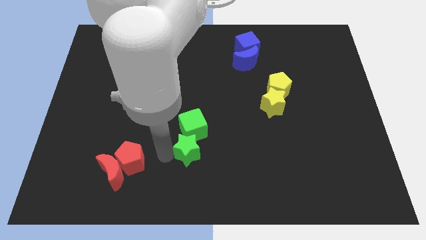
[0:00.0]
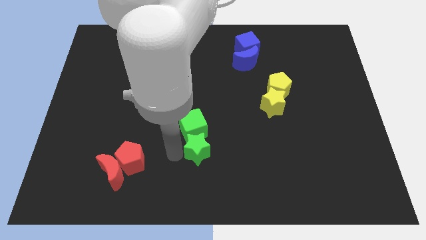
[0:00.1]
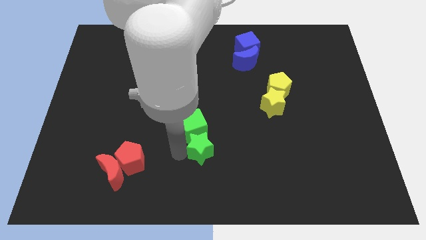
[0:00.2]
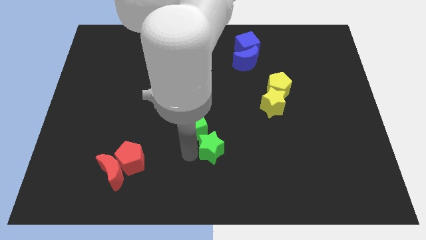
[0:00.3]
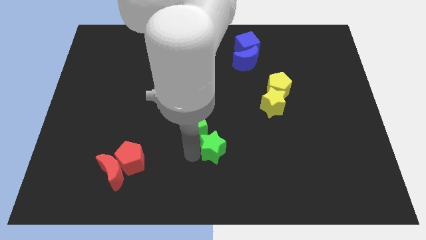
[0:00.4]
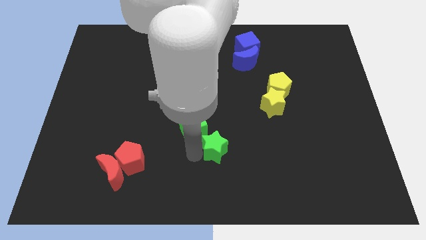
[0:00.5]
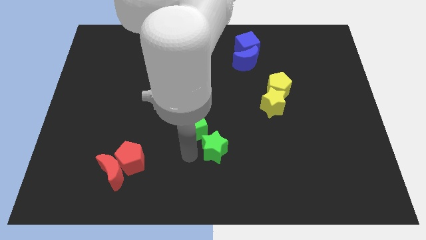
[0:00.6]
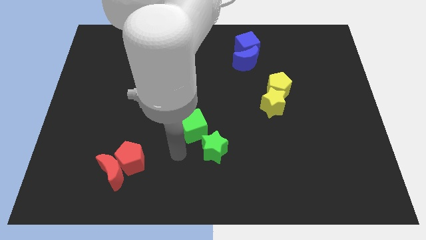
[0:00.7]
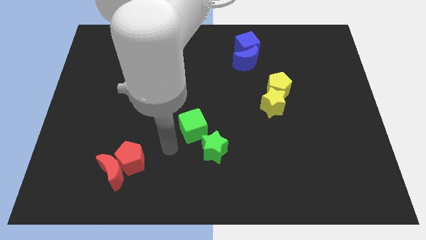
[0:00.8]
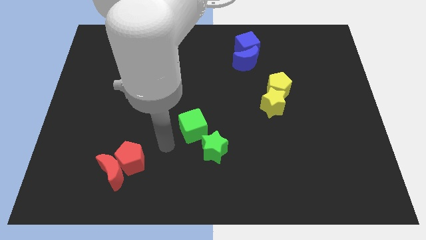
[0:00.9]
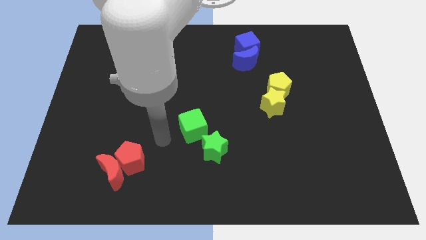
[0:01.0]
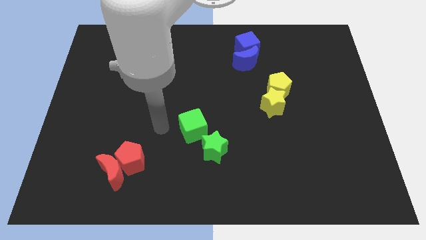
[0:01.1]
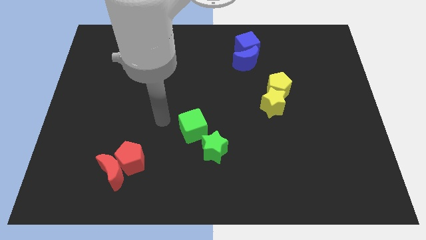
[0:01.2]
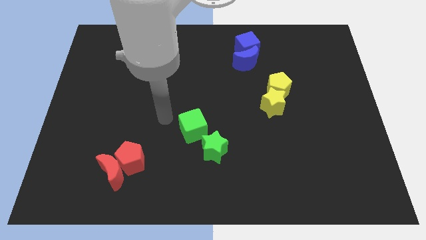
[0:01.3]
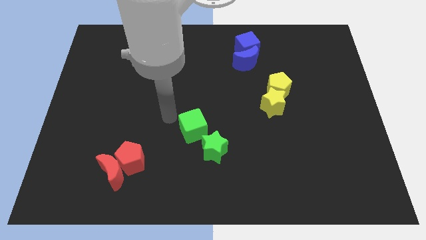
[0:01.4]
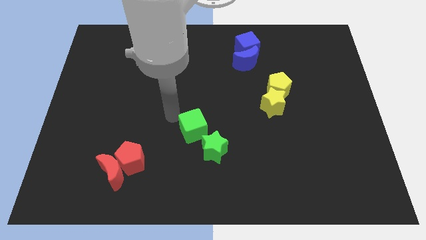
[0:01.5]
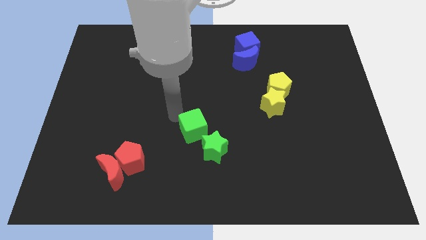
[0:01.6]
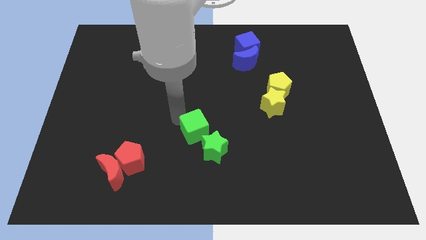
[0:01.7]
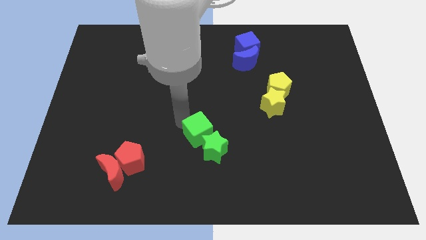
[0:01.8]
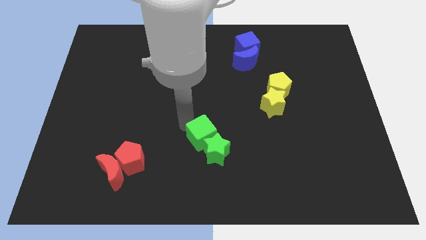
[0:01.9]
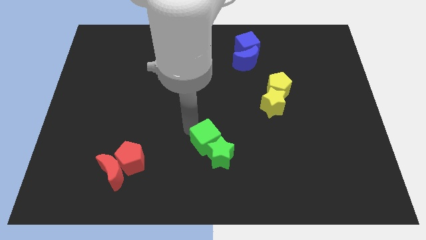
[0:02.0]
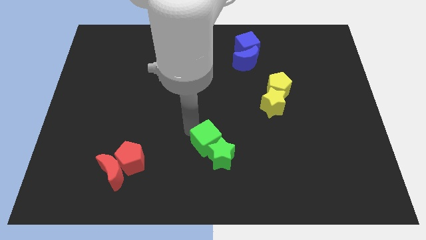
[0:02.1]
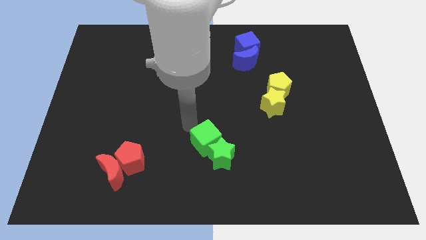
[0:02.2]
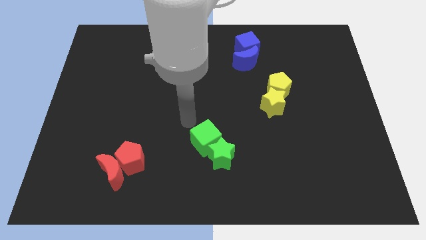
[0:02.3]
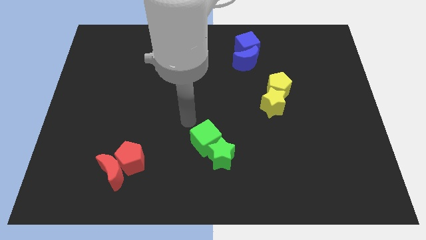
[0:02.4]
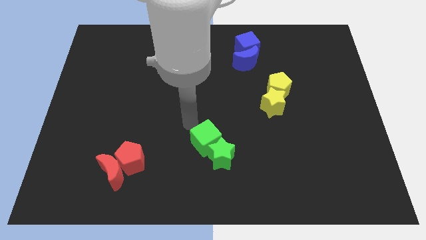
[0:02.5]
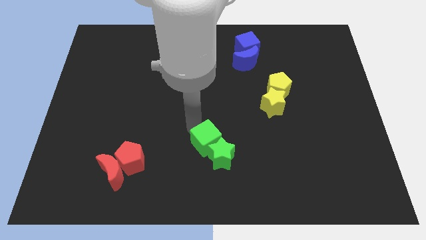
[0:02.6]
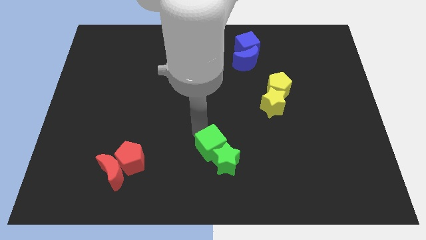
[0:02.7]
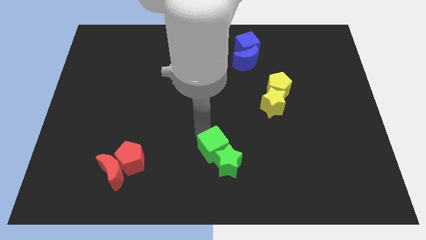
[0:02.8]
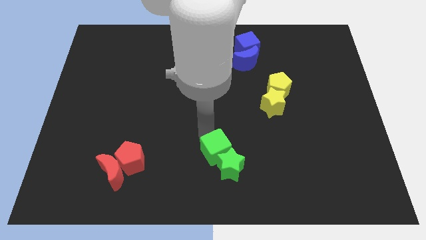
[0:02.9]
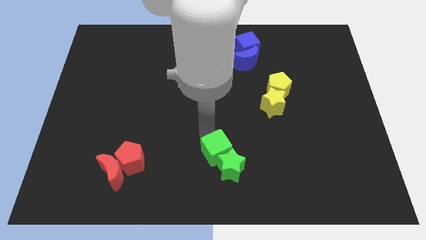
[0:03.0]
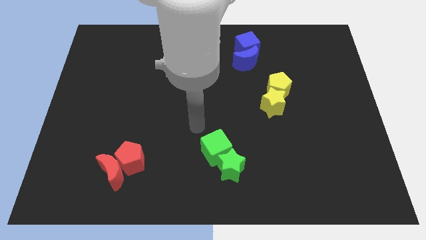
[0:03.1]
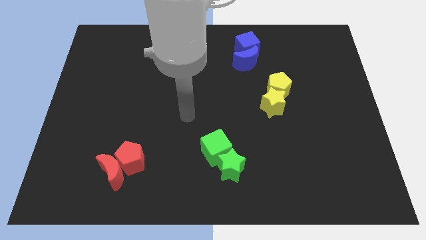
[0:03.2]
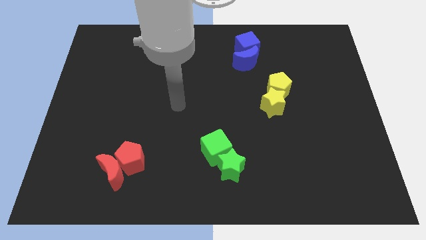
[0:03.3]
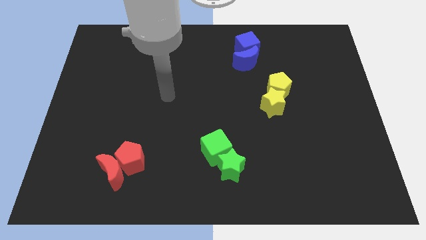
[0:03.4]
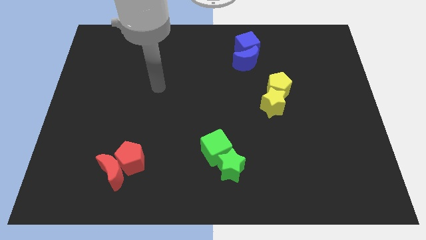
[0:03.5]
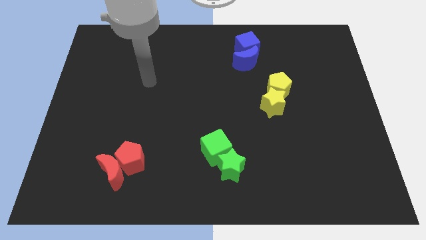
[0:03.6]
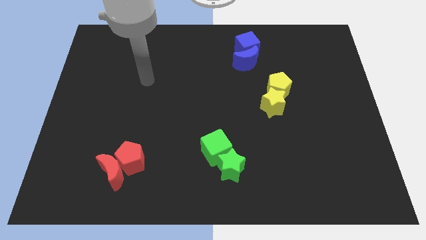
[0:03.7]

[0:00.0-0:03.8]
push the group of green blocks to the right side of the group of red blocks

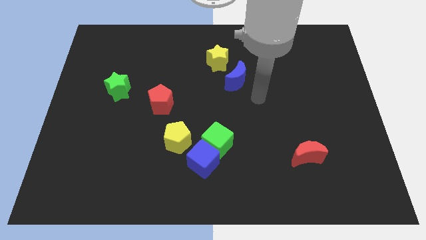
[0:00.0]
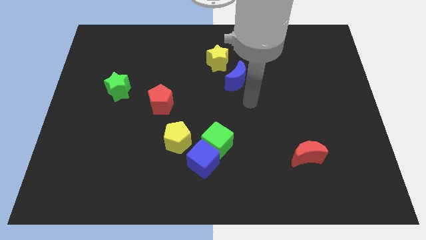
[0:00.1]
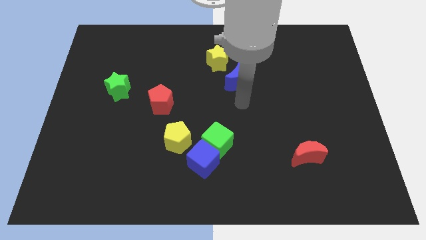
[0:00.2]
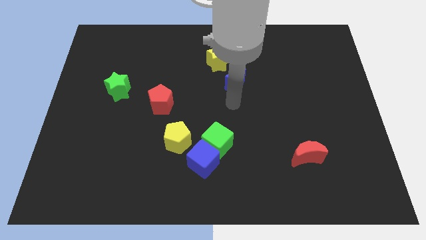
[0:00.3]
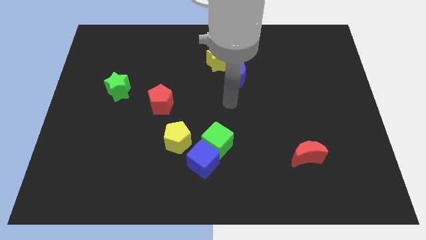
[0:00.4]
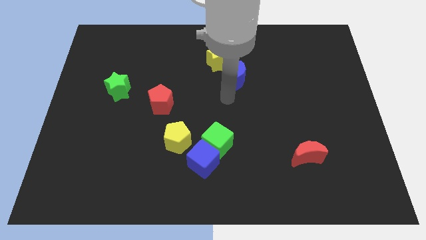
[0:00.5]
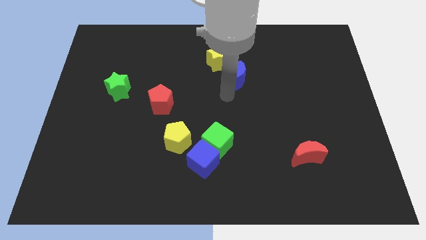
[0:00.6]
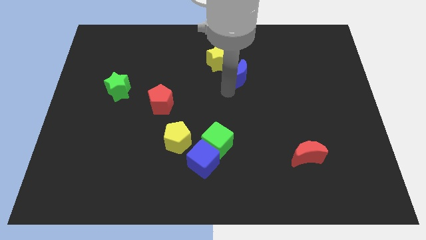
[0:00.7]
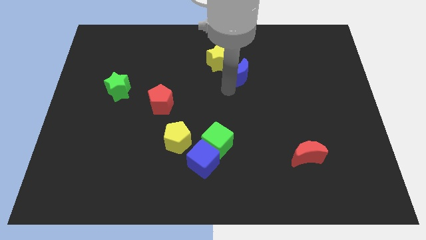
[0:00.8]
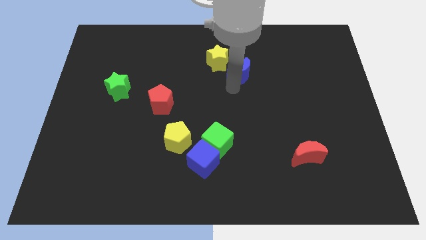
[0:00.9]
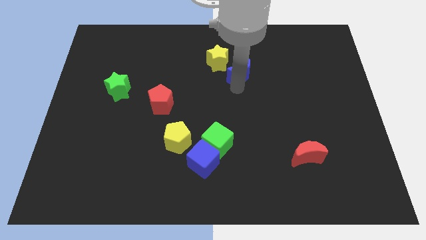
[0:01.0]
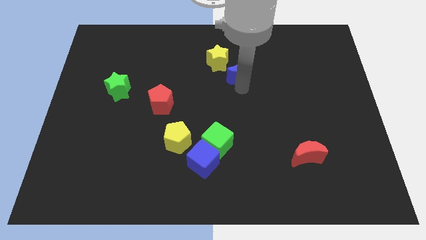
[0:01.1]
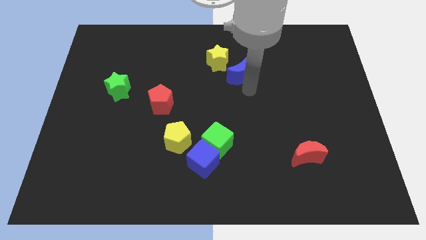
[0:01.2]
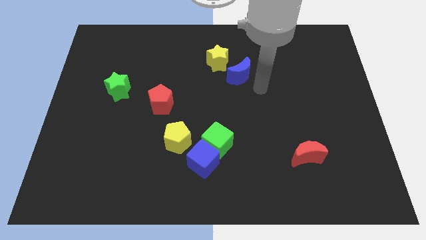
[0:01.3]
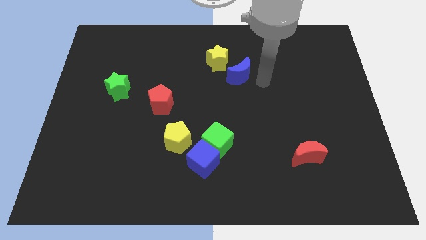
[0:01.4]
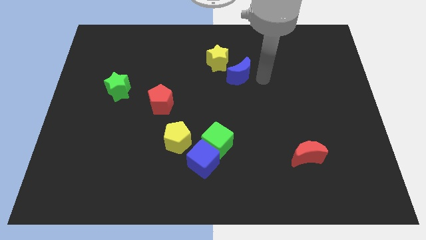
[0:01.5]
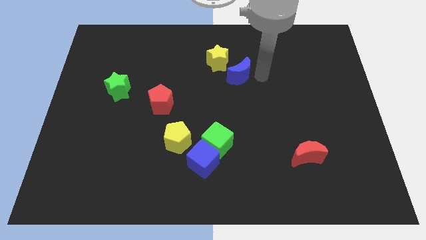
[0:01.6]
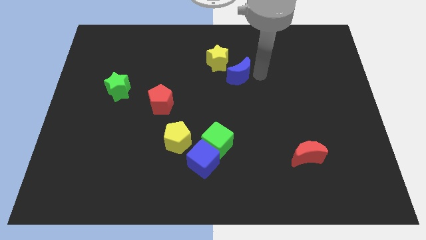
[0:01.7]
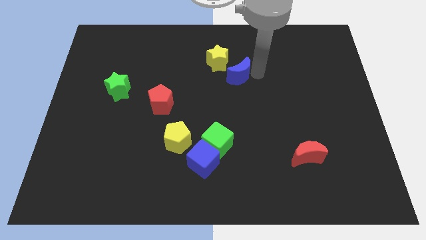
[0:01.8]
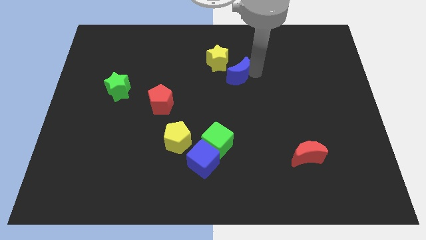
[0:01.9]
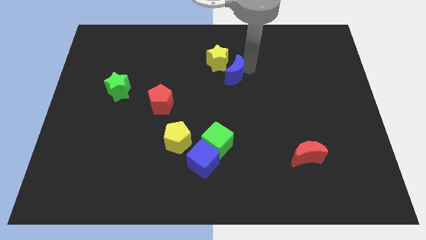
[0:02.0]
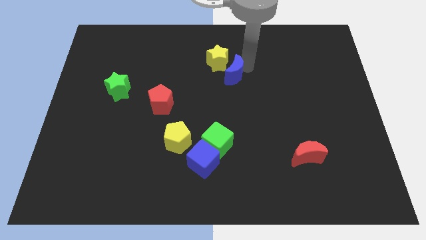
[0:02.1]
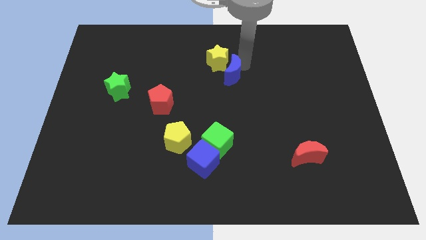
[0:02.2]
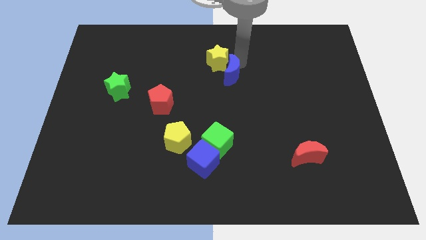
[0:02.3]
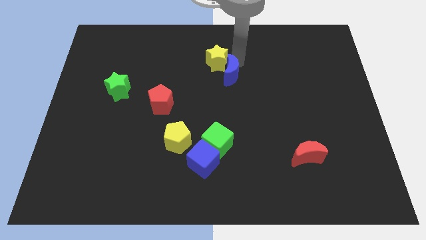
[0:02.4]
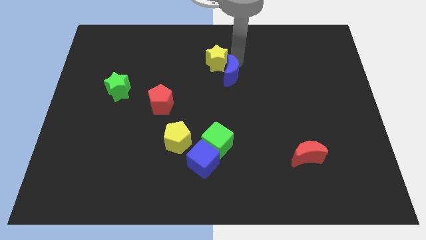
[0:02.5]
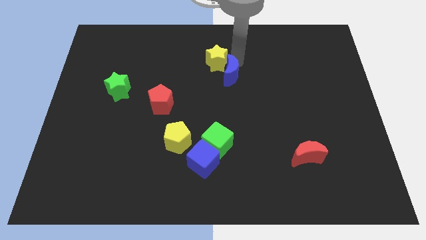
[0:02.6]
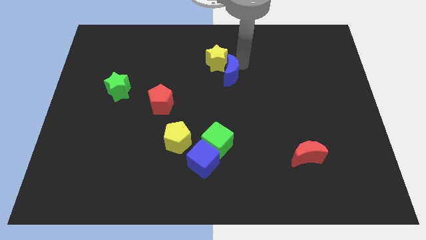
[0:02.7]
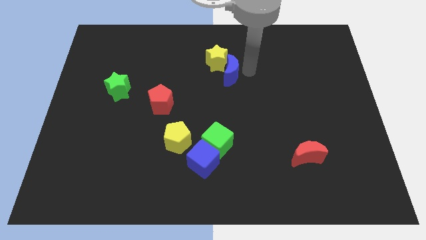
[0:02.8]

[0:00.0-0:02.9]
move blue moon beside yellow star

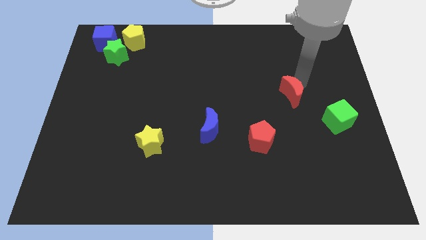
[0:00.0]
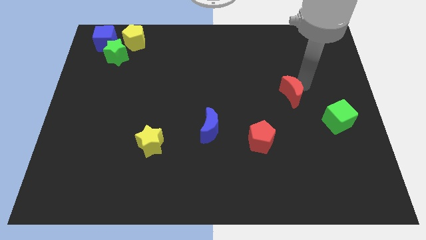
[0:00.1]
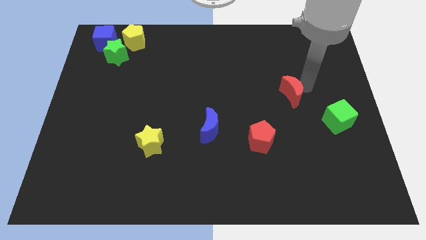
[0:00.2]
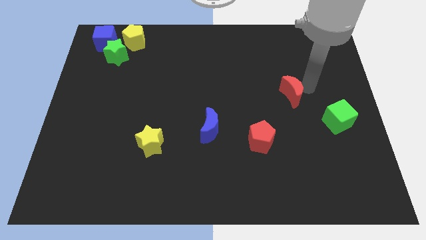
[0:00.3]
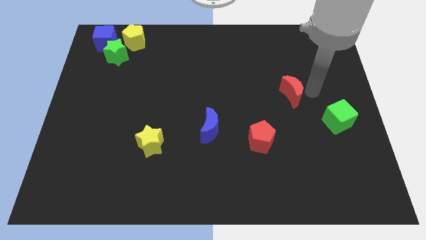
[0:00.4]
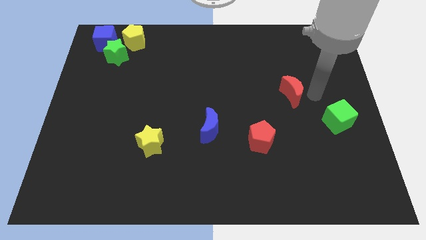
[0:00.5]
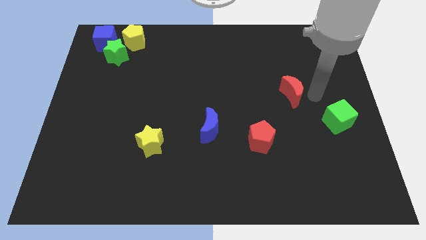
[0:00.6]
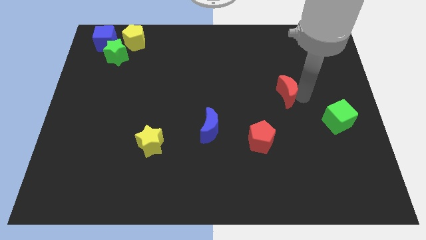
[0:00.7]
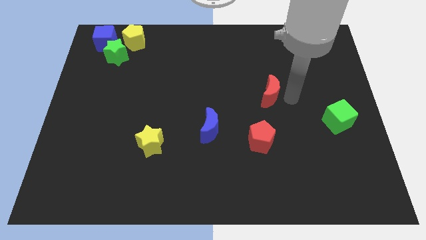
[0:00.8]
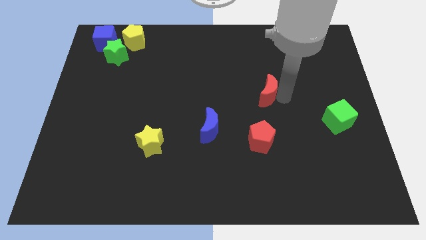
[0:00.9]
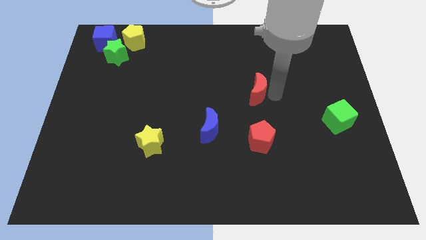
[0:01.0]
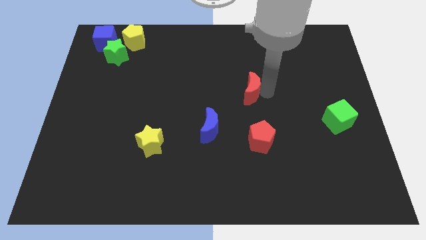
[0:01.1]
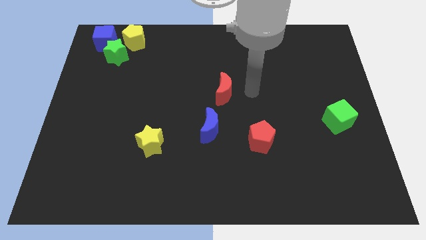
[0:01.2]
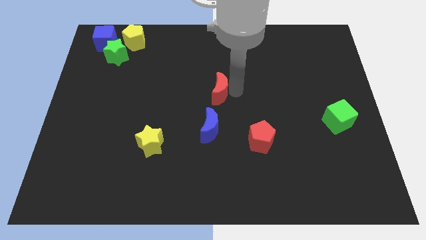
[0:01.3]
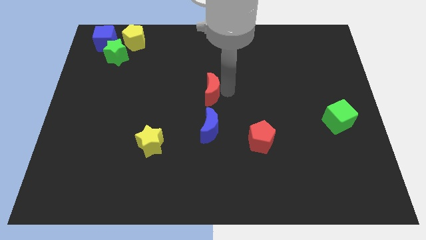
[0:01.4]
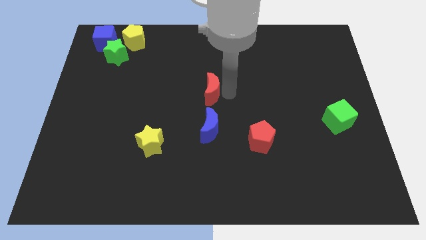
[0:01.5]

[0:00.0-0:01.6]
place the red crescent above the blue crescent

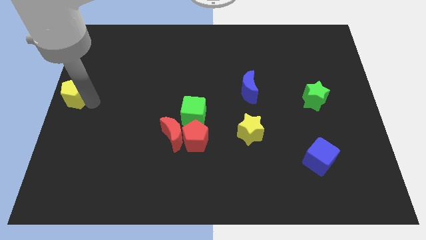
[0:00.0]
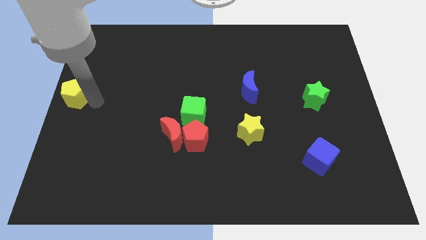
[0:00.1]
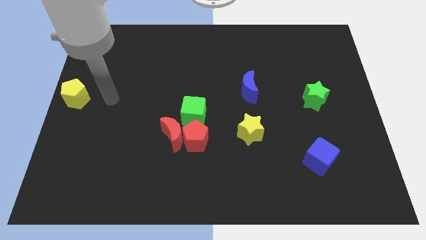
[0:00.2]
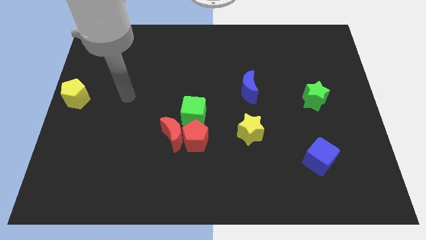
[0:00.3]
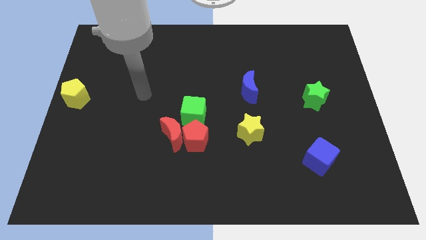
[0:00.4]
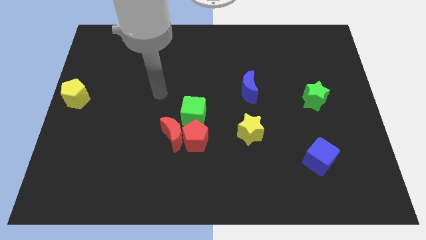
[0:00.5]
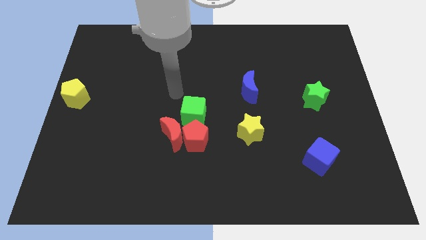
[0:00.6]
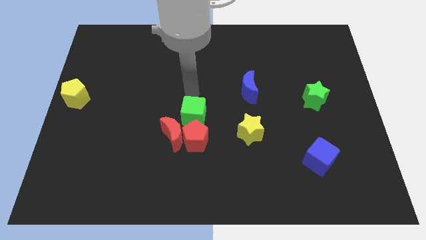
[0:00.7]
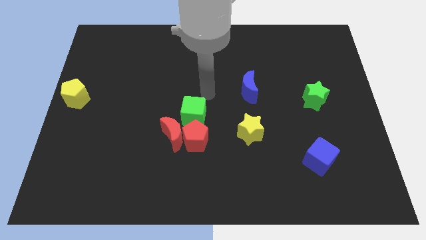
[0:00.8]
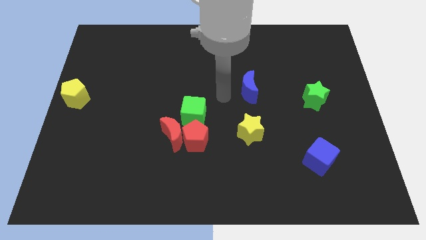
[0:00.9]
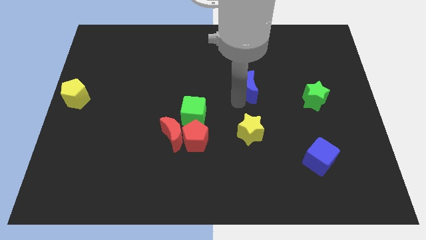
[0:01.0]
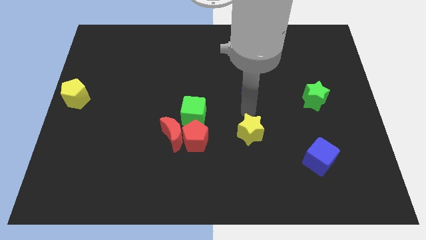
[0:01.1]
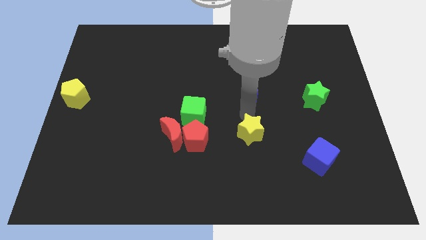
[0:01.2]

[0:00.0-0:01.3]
place your arm at the top of the yellow star
